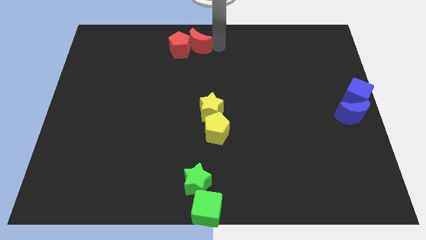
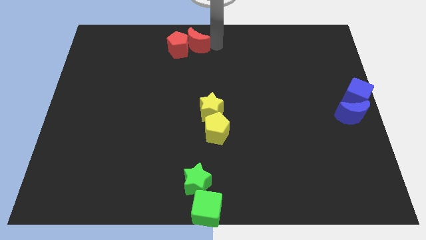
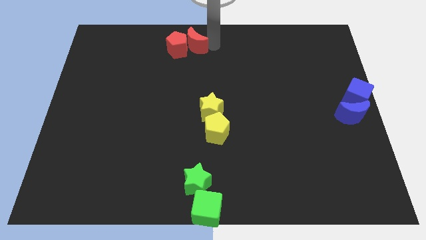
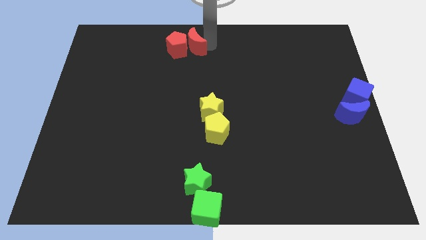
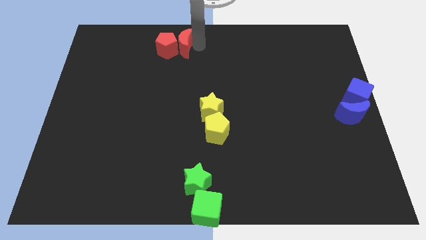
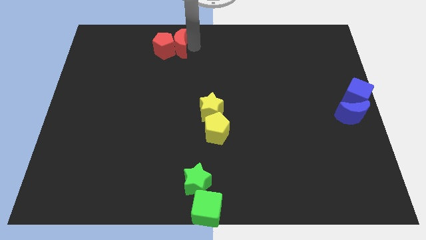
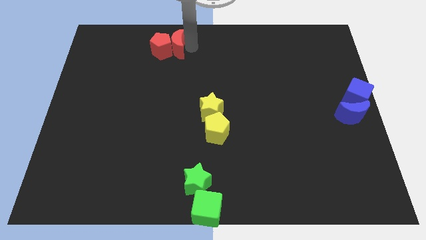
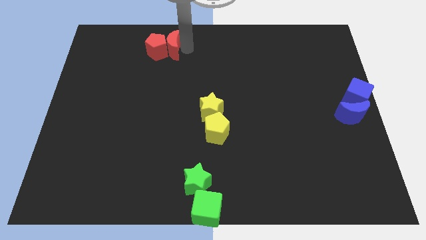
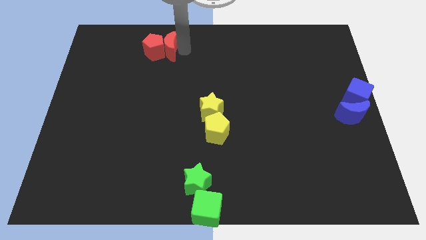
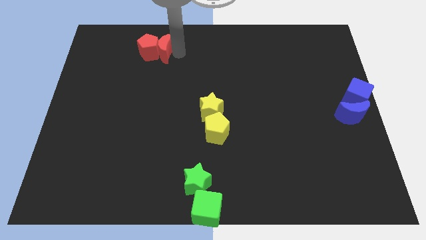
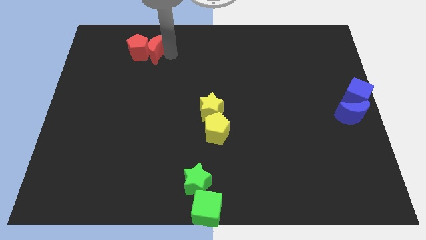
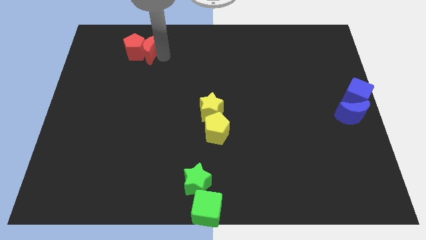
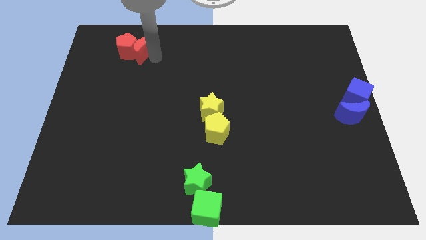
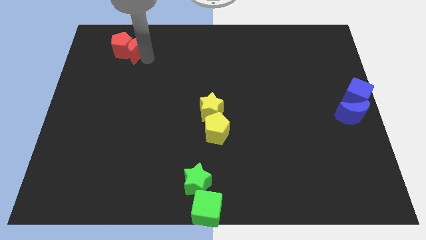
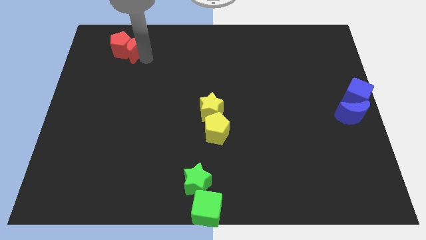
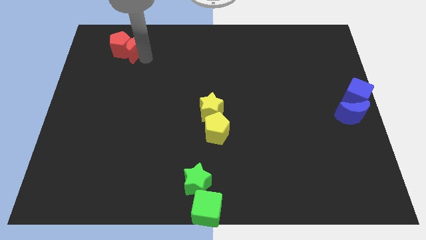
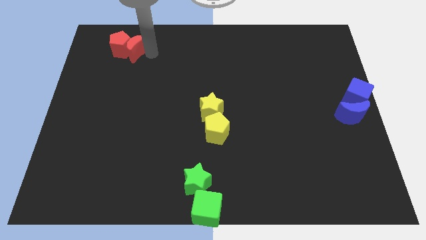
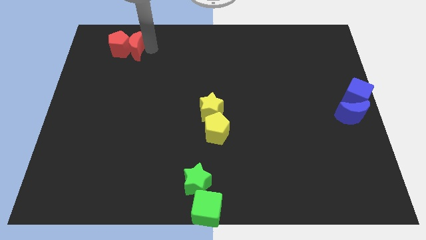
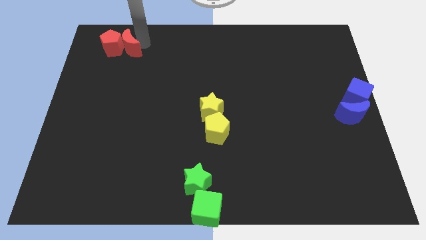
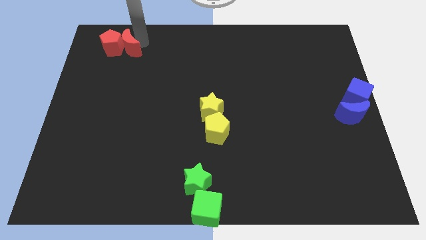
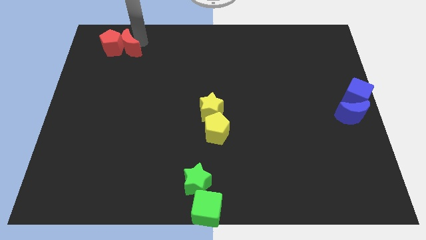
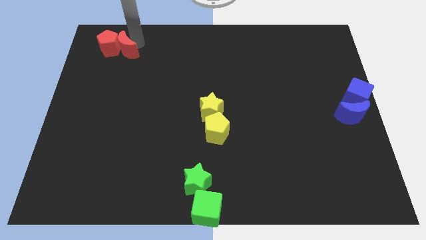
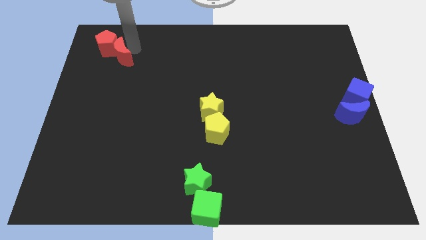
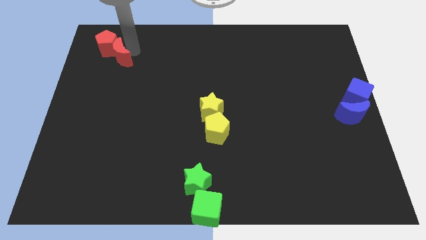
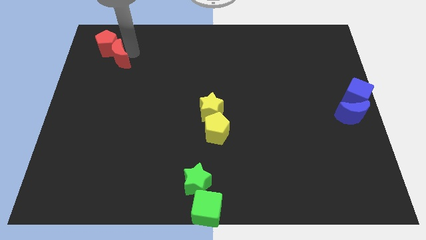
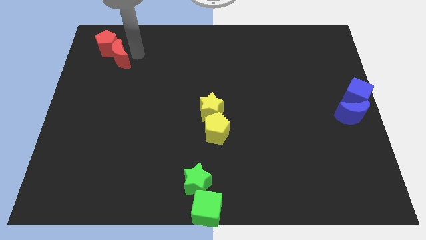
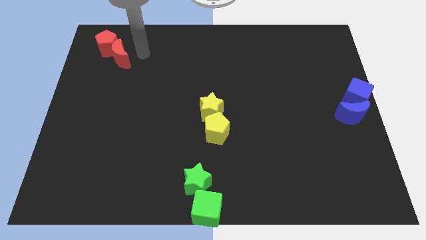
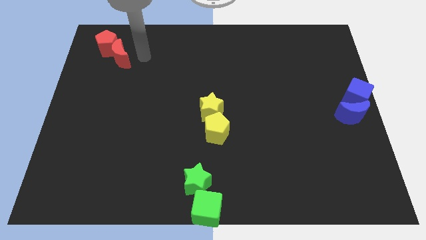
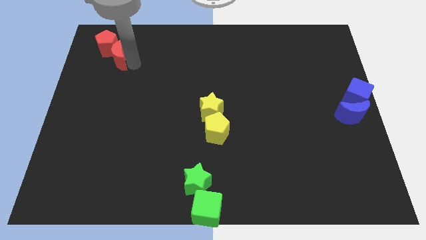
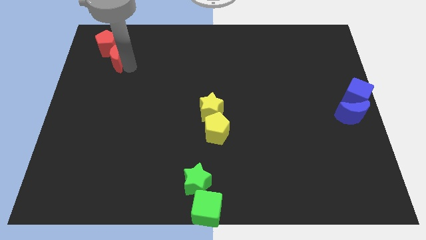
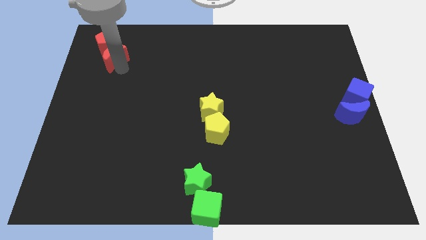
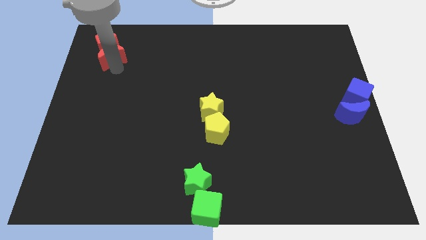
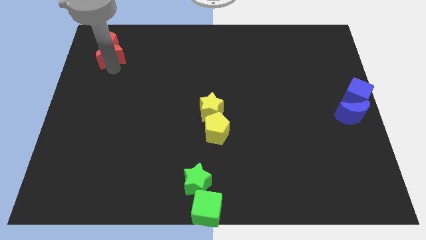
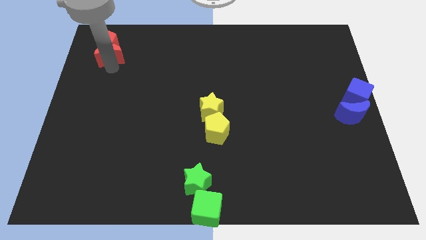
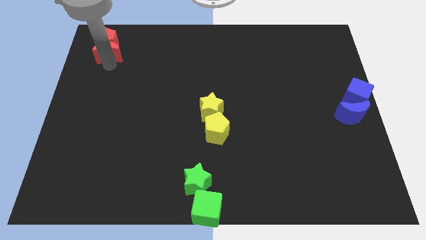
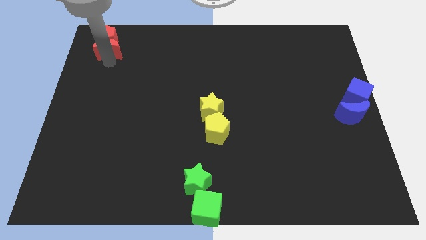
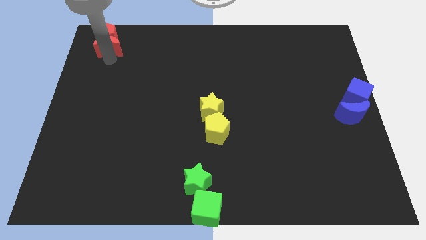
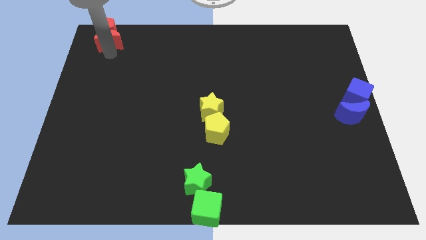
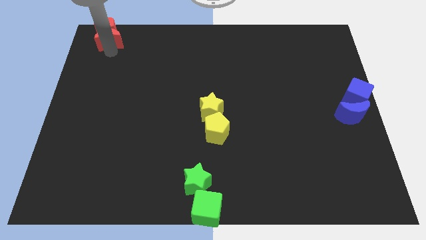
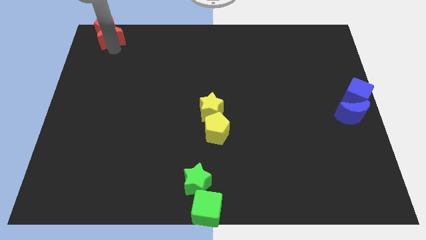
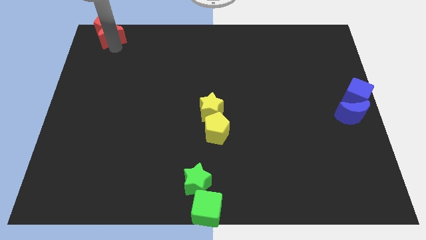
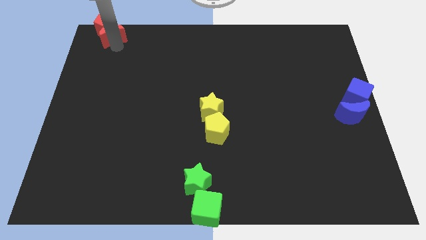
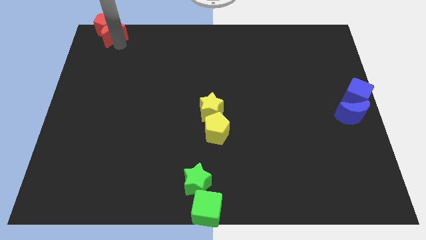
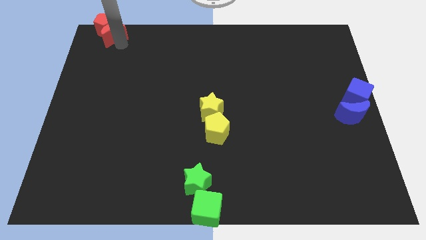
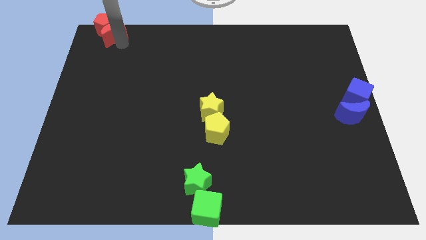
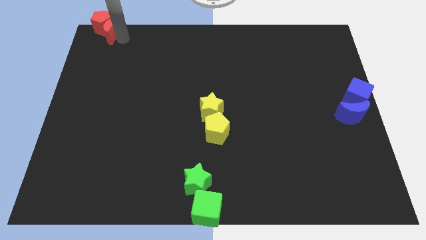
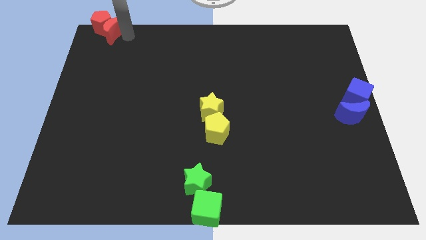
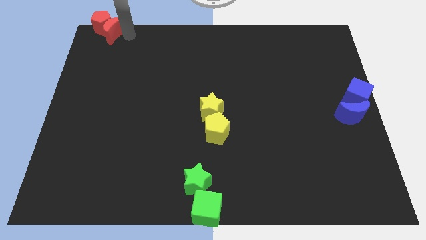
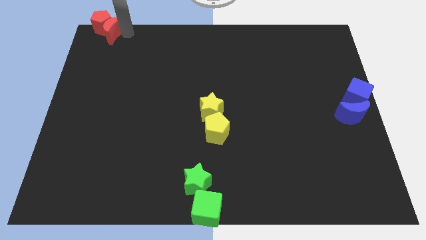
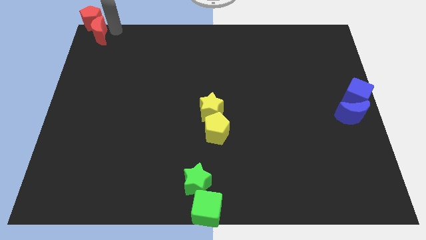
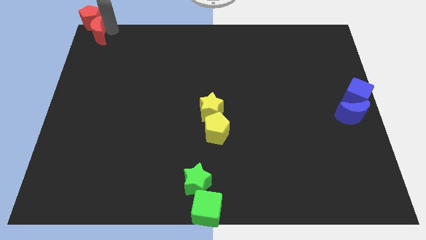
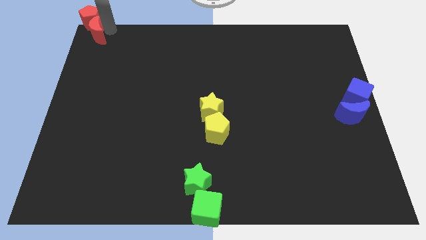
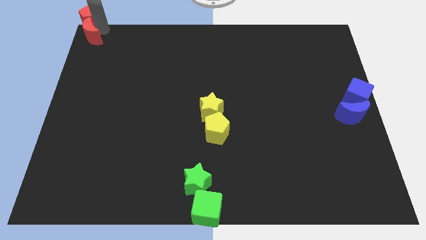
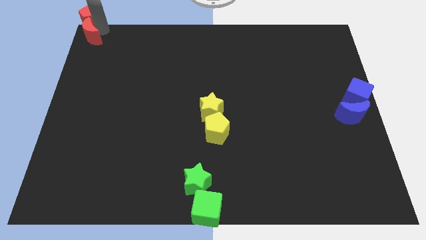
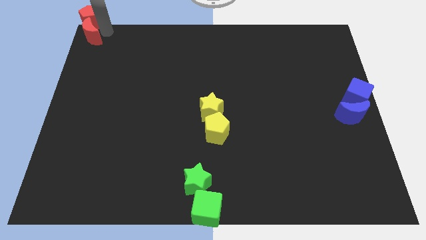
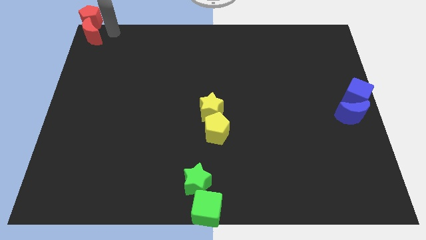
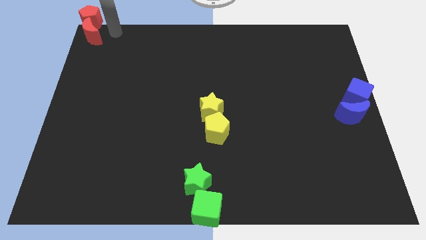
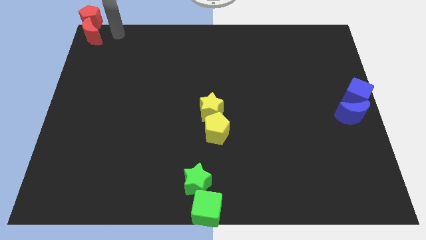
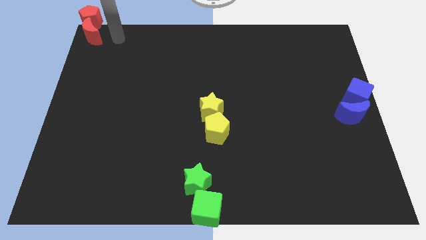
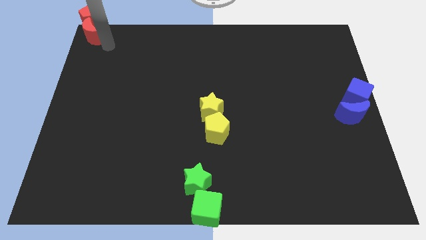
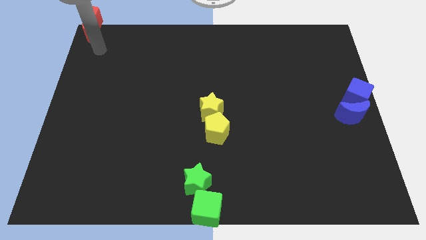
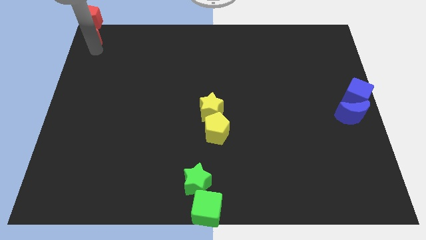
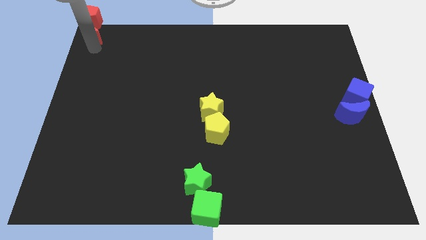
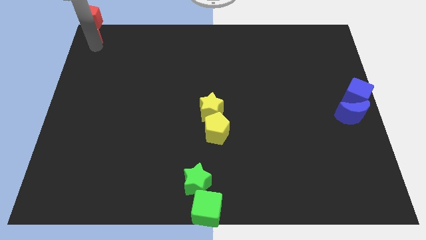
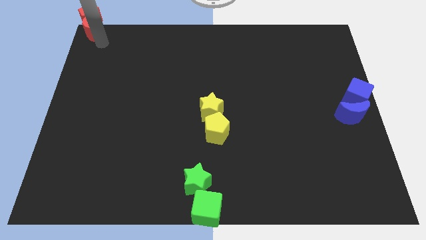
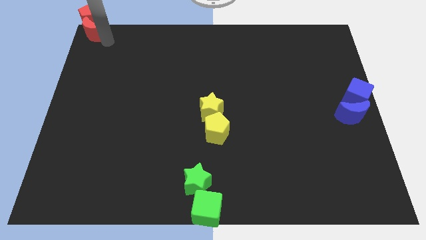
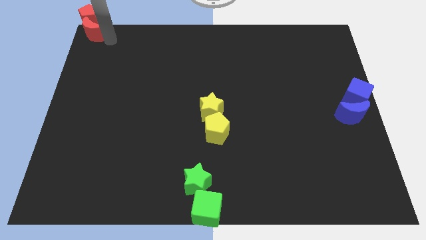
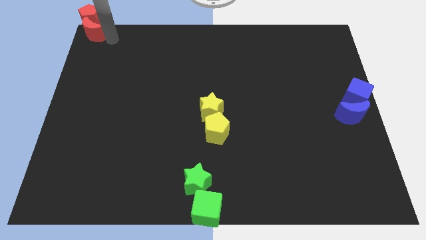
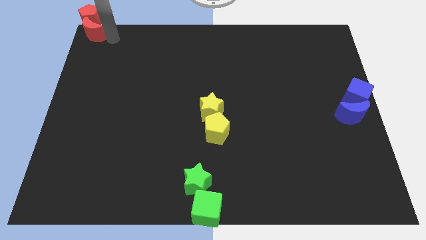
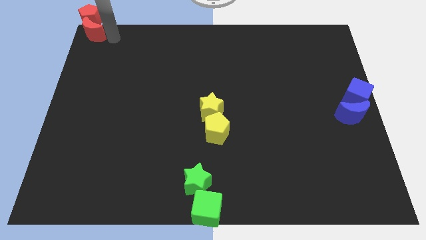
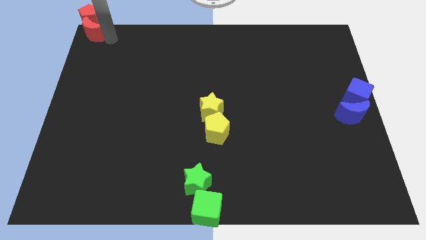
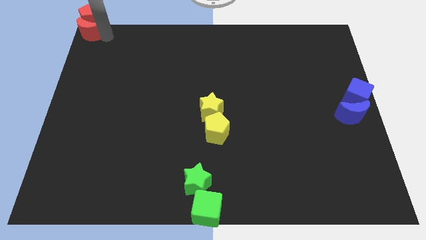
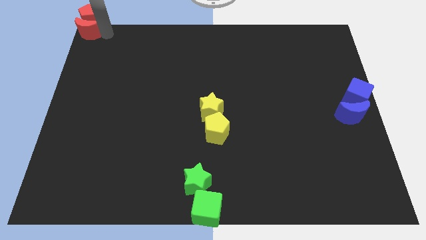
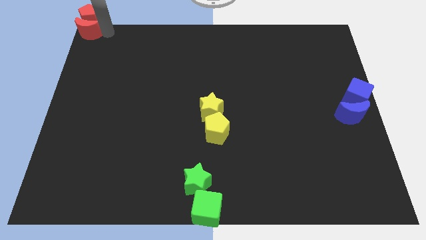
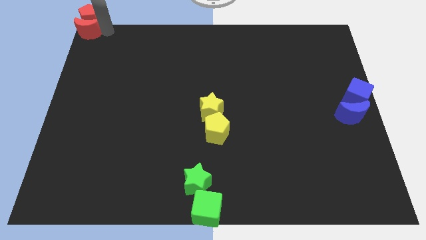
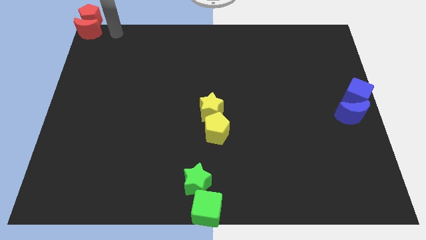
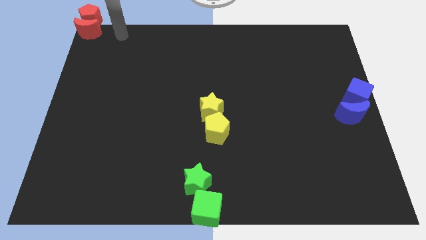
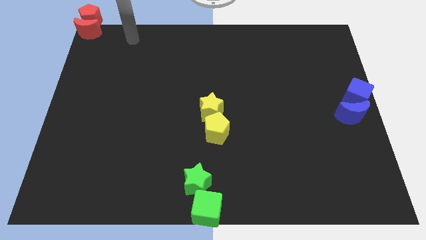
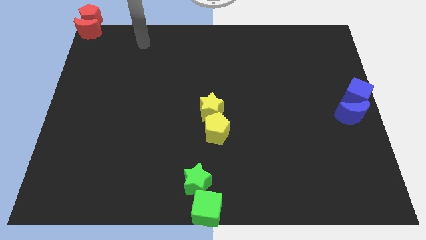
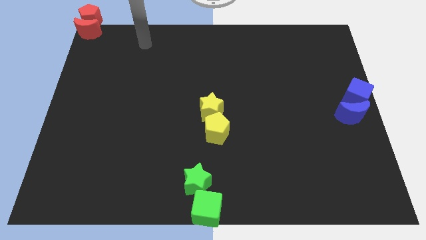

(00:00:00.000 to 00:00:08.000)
move the red moon and the red pentagon to the top left corner of the board
